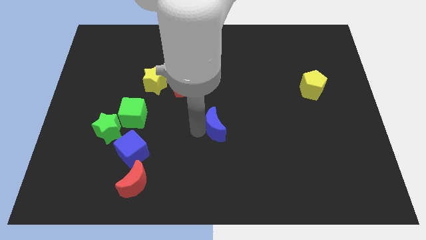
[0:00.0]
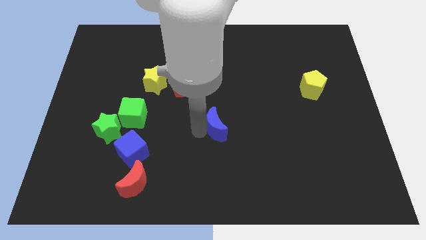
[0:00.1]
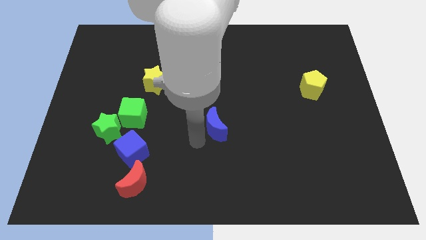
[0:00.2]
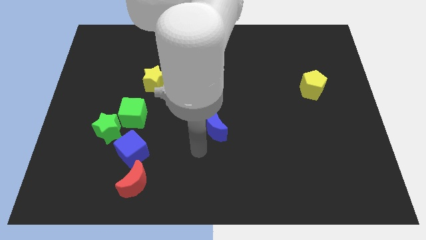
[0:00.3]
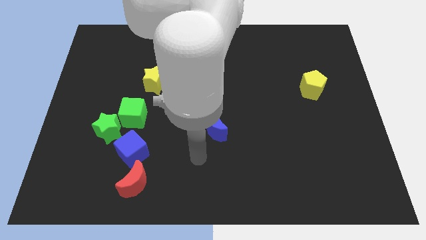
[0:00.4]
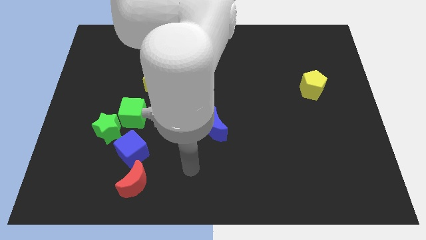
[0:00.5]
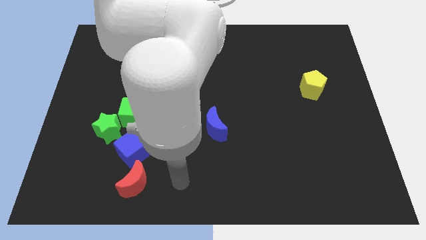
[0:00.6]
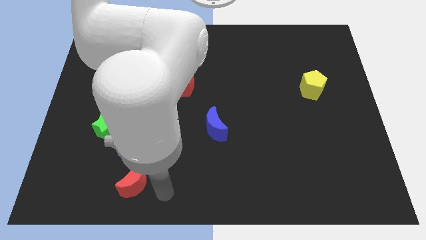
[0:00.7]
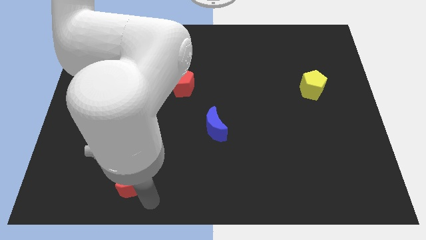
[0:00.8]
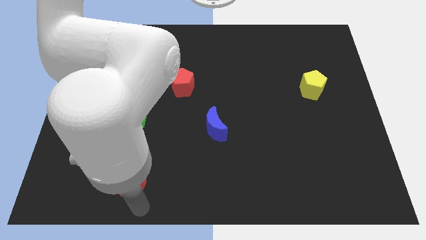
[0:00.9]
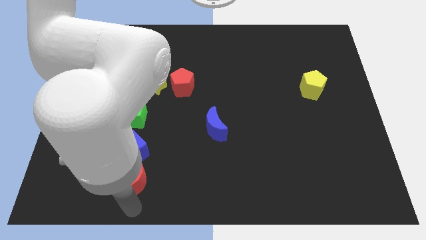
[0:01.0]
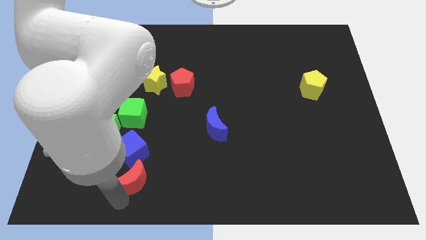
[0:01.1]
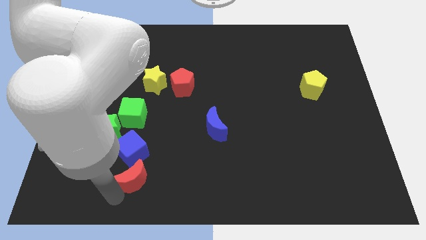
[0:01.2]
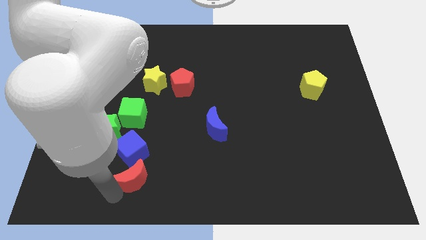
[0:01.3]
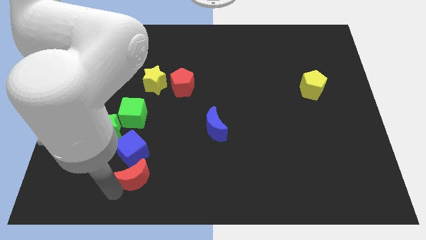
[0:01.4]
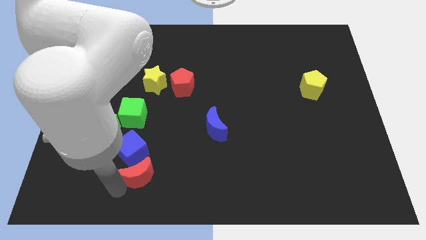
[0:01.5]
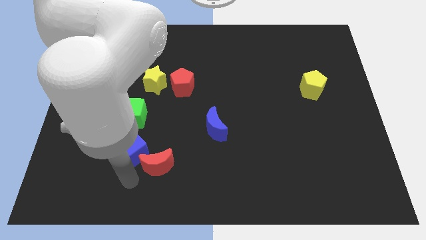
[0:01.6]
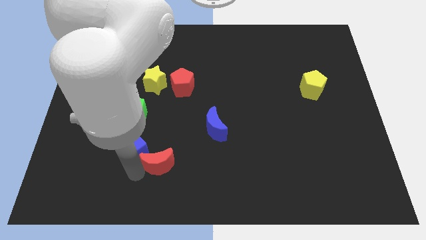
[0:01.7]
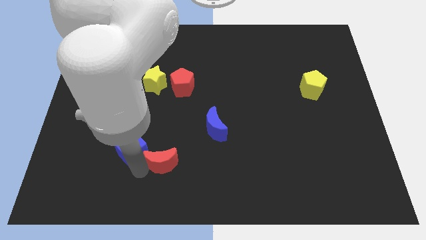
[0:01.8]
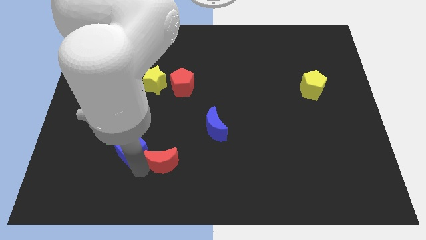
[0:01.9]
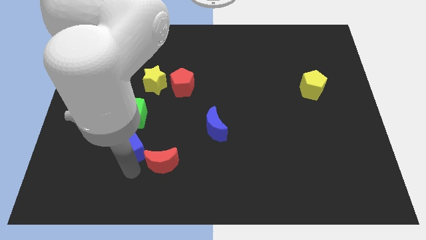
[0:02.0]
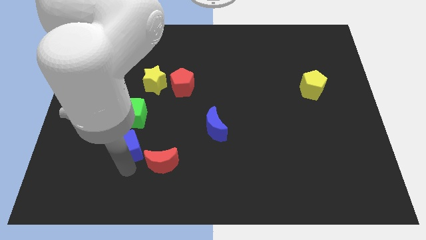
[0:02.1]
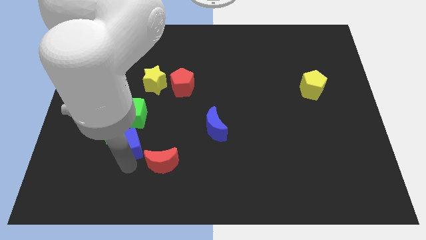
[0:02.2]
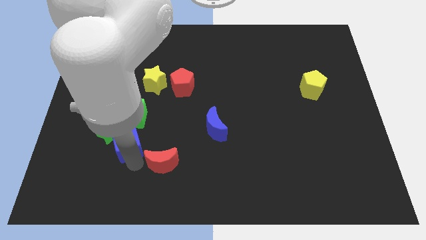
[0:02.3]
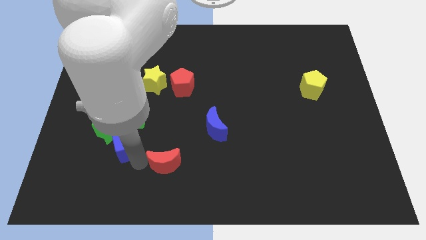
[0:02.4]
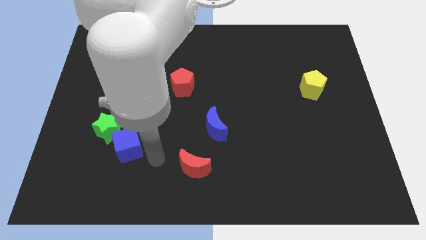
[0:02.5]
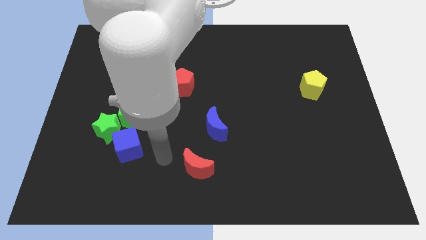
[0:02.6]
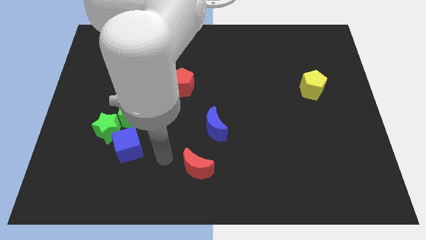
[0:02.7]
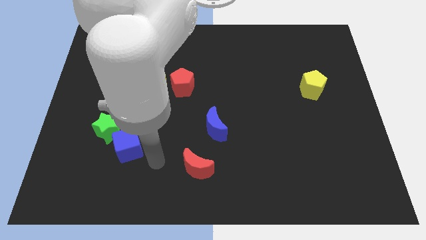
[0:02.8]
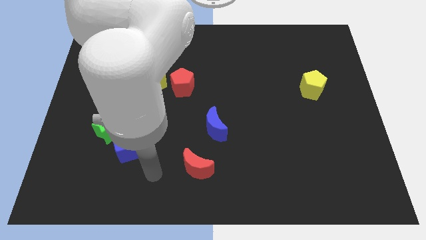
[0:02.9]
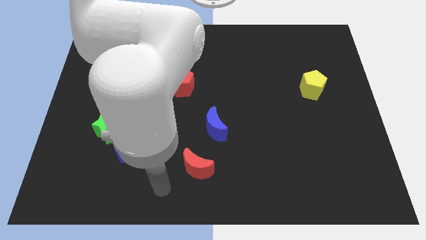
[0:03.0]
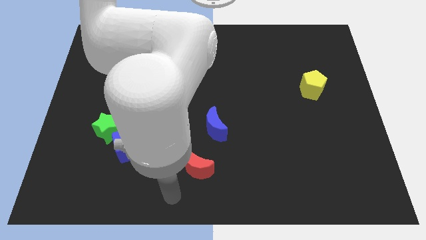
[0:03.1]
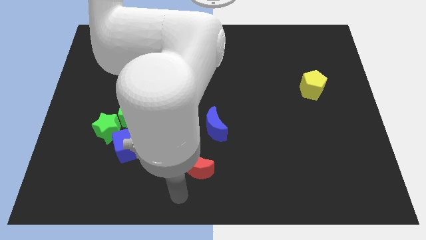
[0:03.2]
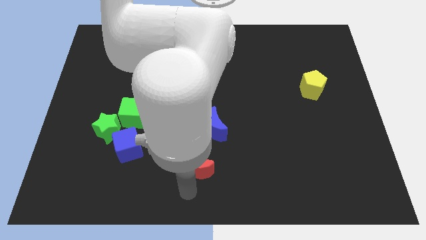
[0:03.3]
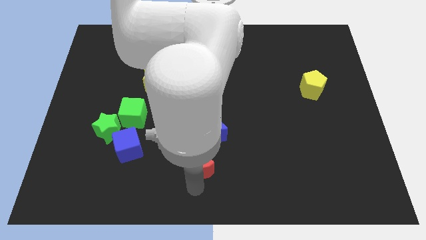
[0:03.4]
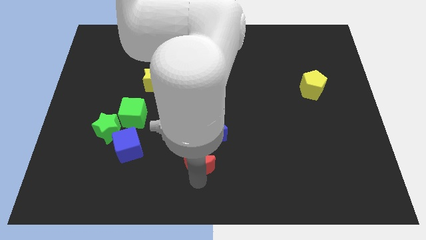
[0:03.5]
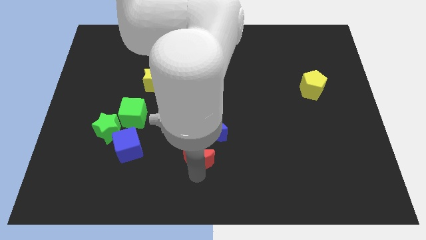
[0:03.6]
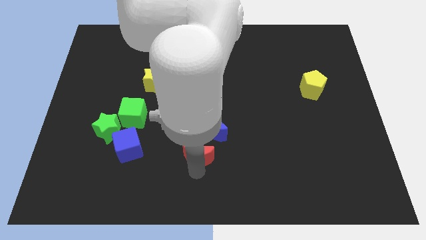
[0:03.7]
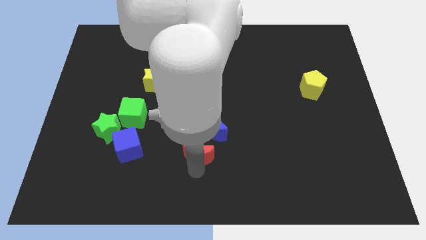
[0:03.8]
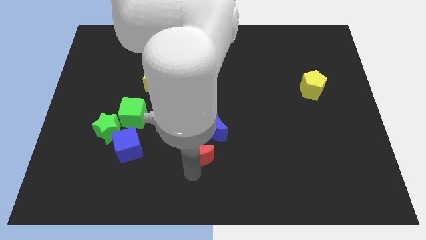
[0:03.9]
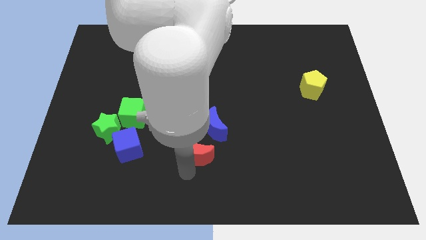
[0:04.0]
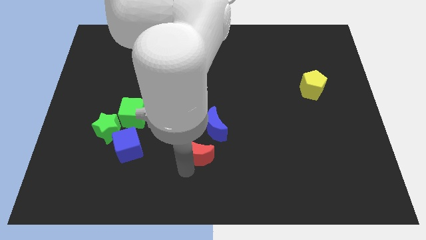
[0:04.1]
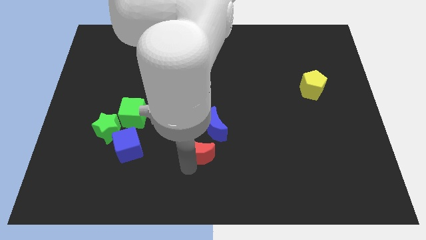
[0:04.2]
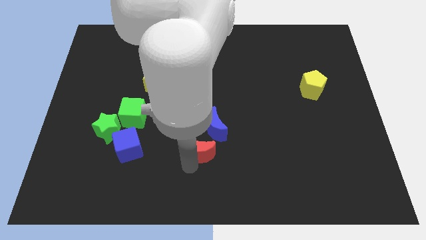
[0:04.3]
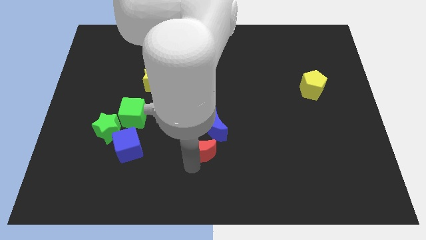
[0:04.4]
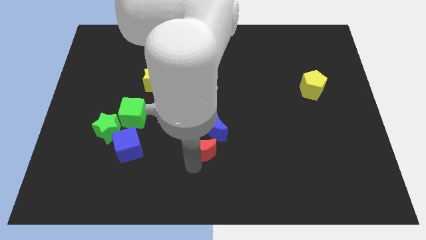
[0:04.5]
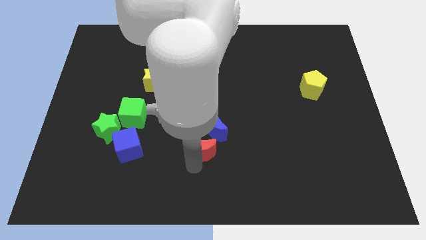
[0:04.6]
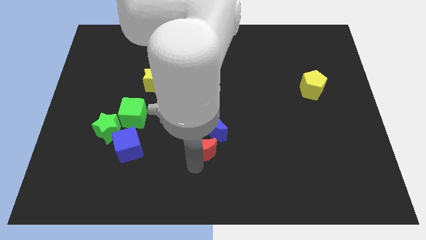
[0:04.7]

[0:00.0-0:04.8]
move the red moon horizontal to the blue cube

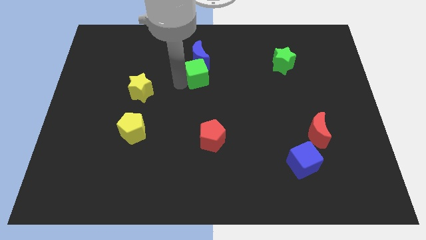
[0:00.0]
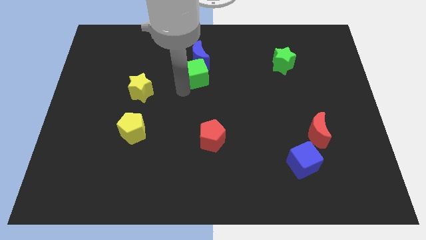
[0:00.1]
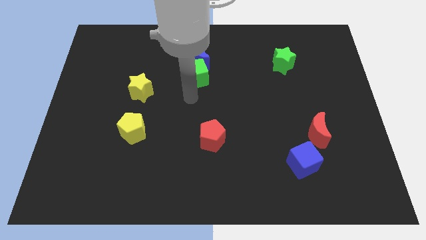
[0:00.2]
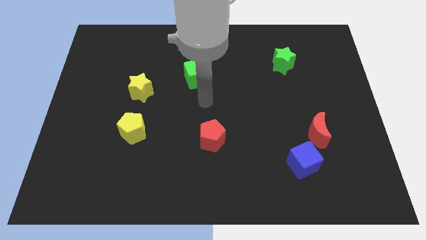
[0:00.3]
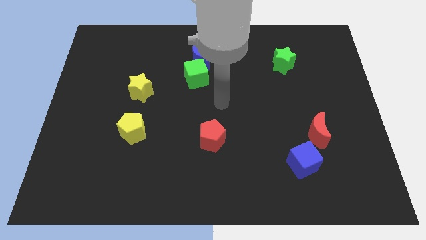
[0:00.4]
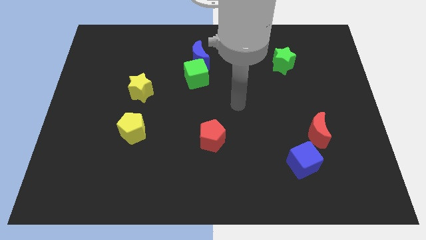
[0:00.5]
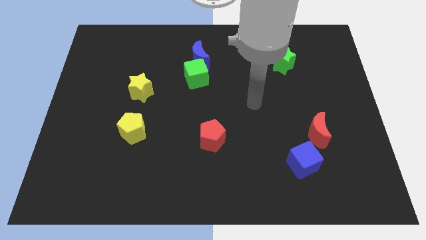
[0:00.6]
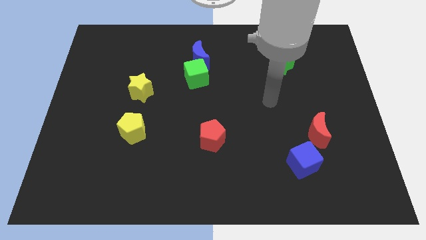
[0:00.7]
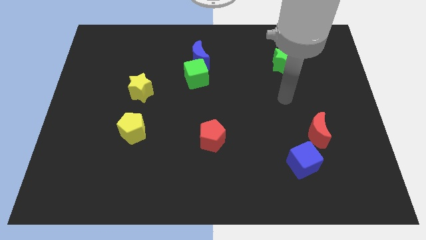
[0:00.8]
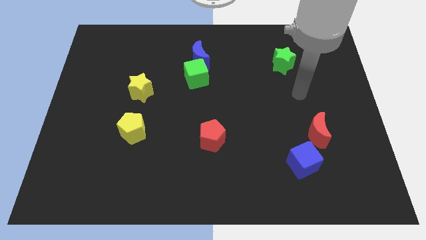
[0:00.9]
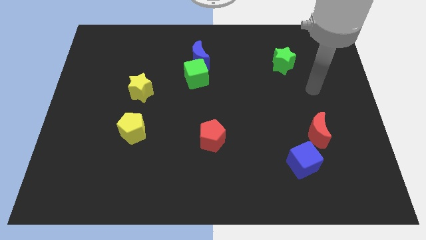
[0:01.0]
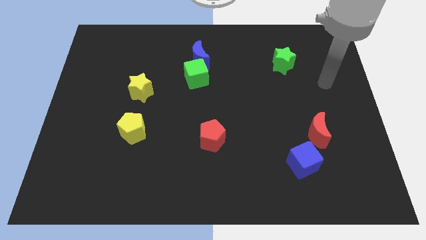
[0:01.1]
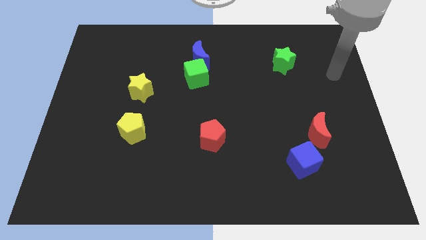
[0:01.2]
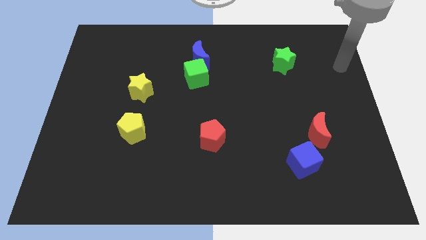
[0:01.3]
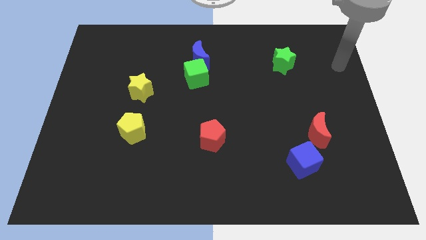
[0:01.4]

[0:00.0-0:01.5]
move arm away from green cube

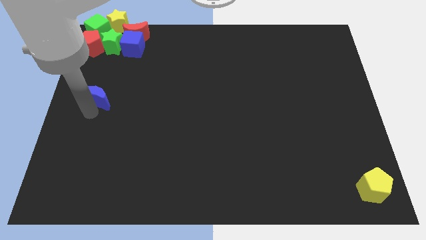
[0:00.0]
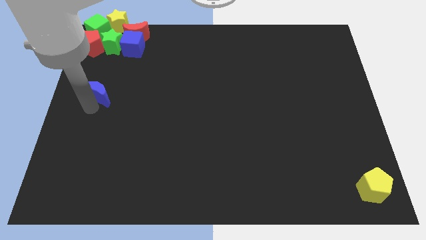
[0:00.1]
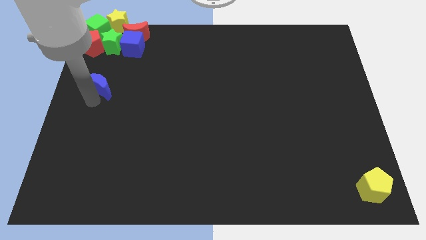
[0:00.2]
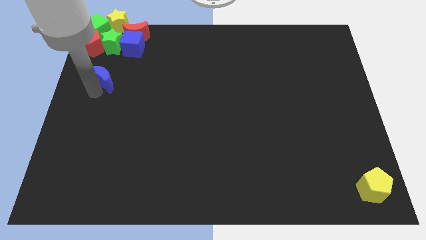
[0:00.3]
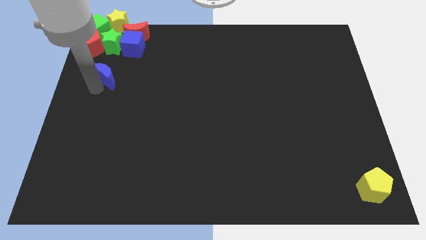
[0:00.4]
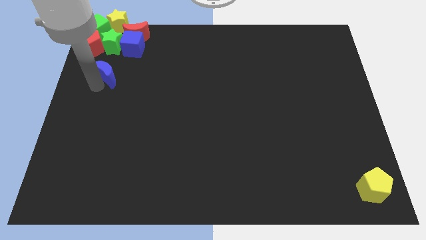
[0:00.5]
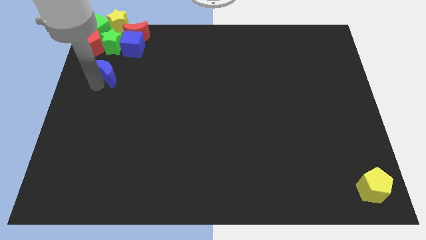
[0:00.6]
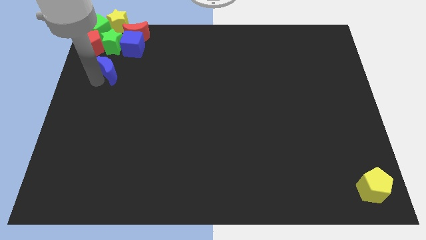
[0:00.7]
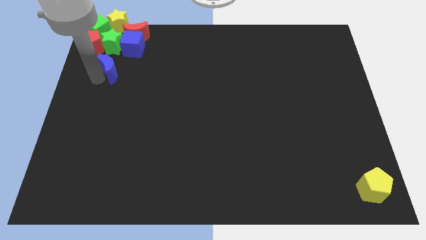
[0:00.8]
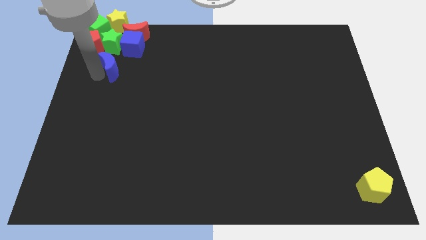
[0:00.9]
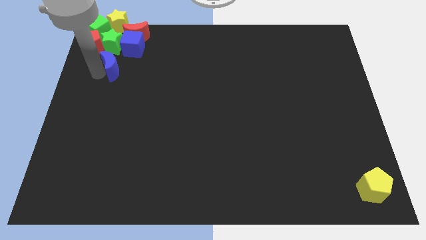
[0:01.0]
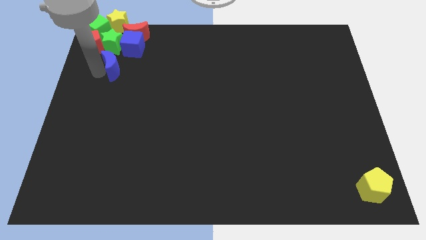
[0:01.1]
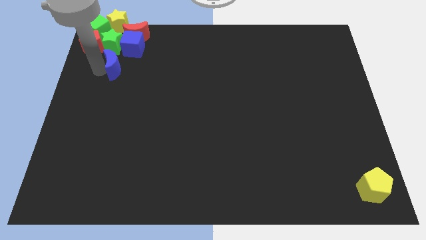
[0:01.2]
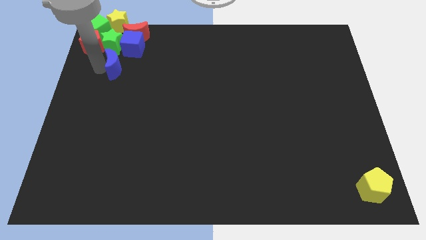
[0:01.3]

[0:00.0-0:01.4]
place the blue moon vertically below the green star

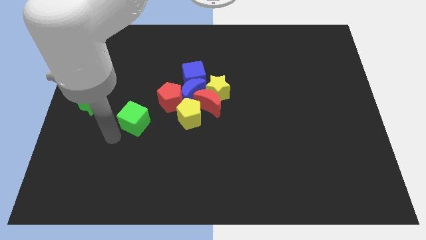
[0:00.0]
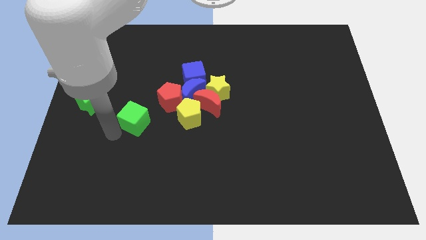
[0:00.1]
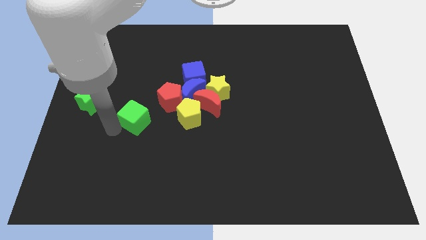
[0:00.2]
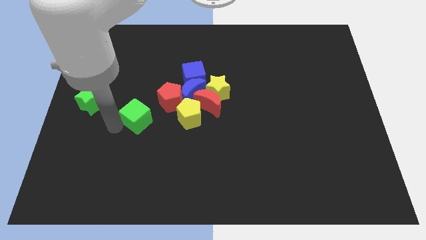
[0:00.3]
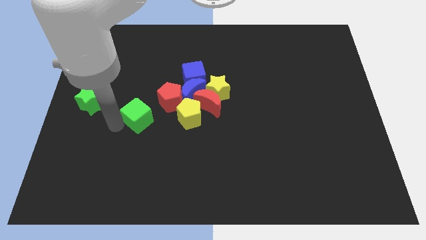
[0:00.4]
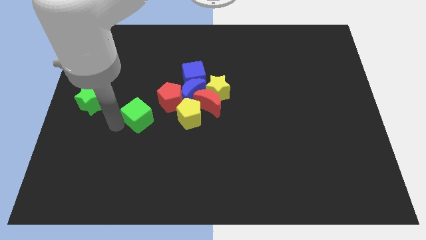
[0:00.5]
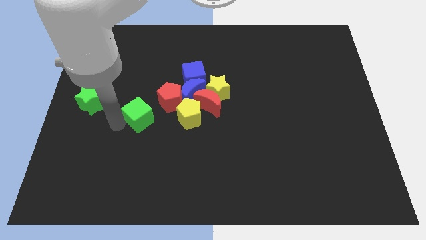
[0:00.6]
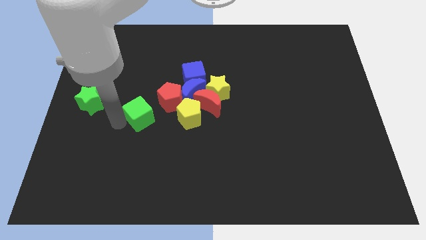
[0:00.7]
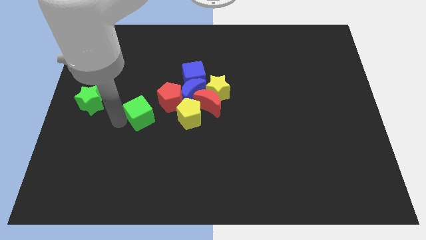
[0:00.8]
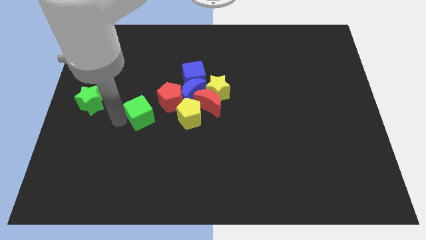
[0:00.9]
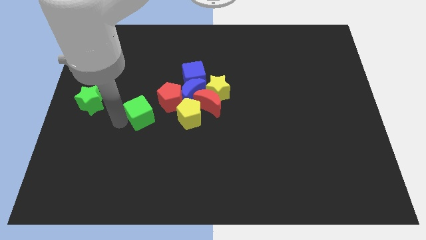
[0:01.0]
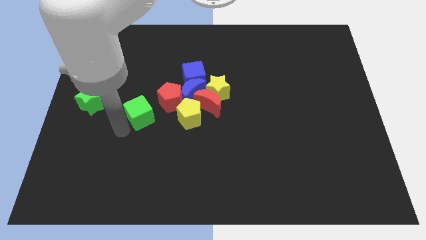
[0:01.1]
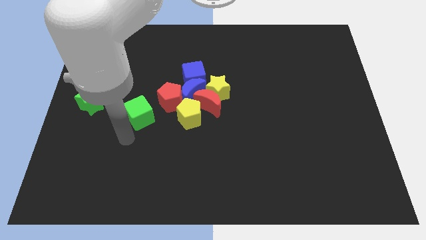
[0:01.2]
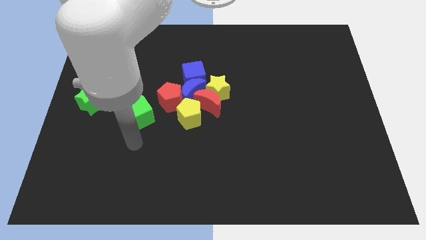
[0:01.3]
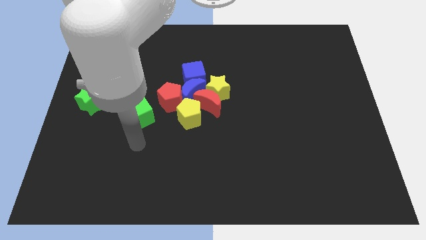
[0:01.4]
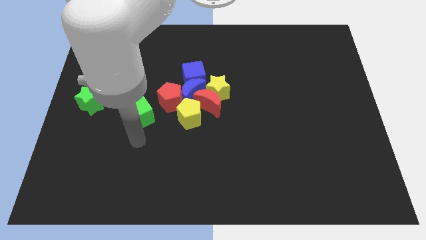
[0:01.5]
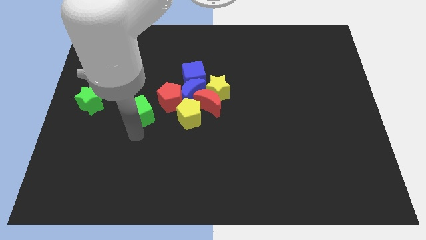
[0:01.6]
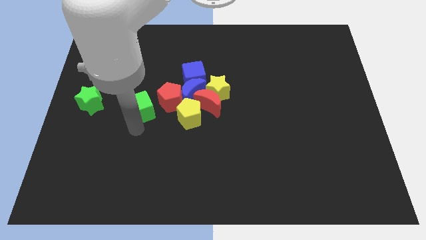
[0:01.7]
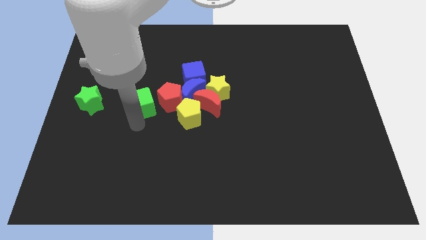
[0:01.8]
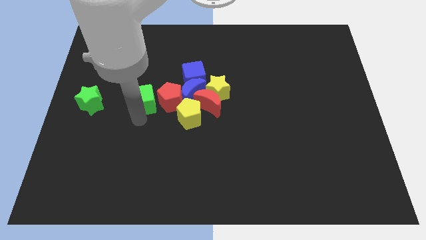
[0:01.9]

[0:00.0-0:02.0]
push the green cube to the left of the red pentagon
